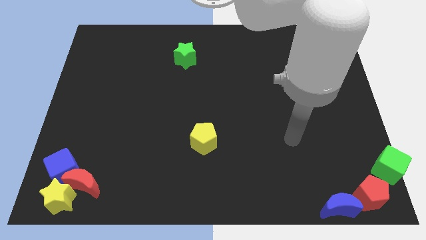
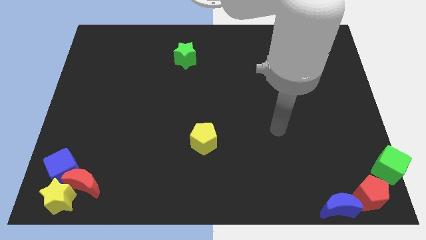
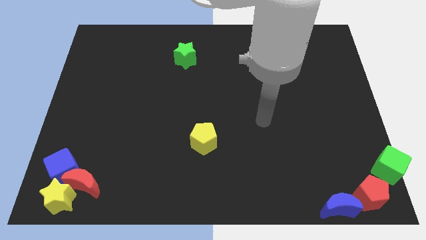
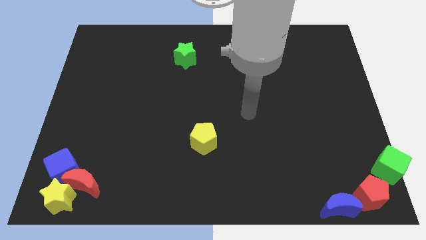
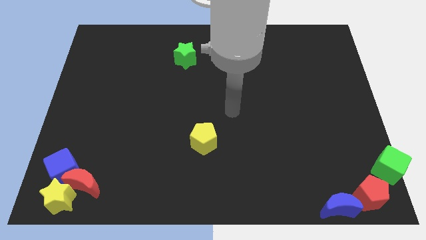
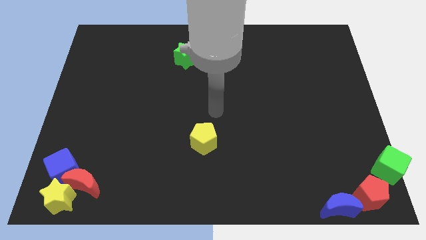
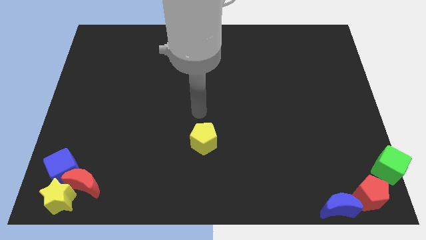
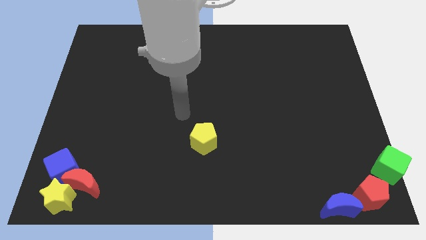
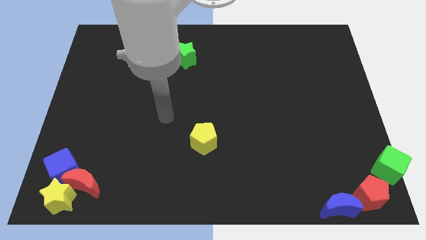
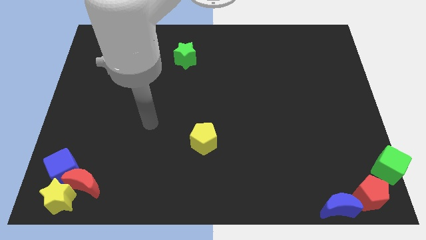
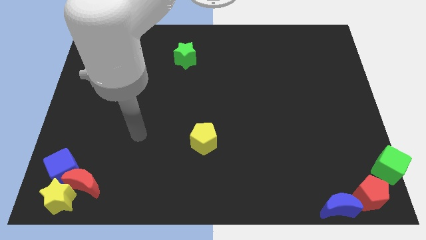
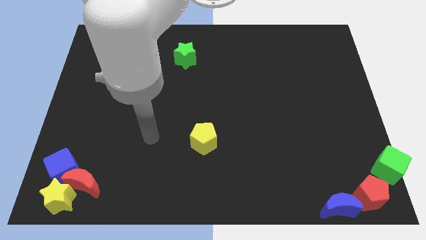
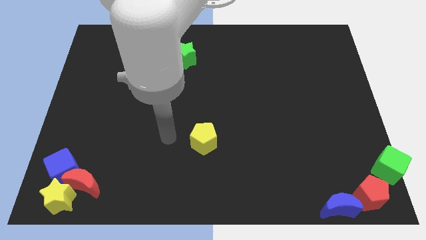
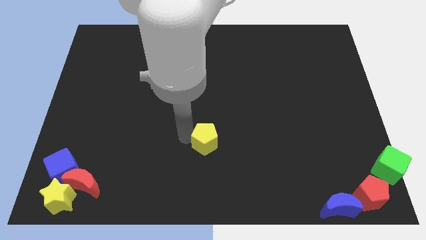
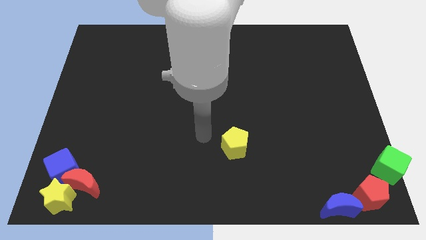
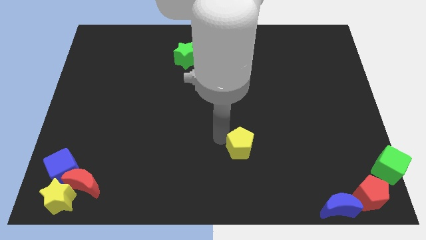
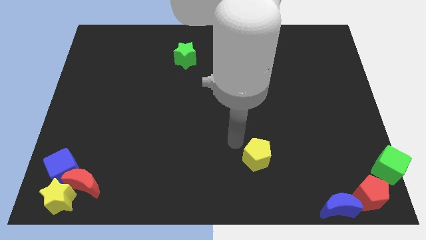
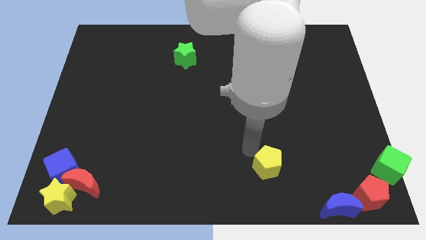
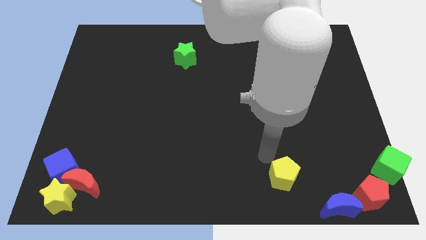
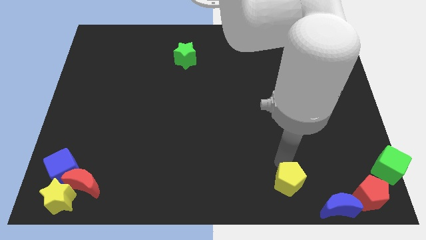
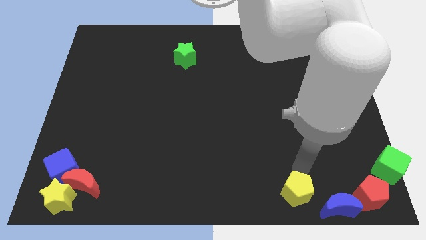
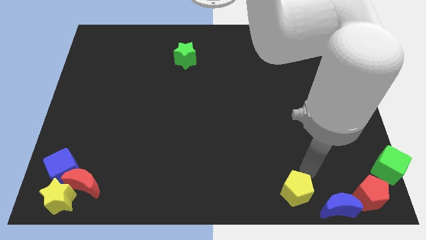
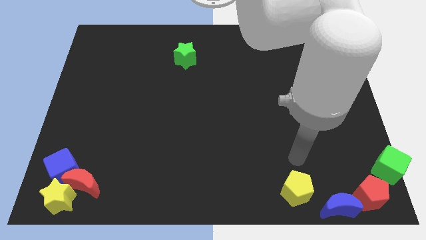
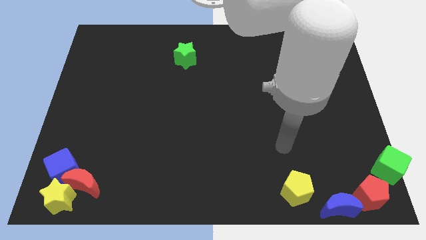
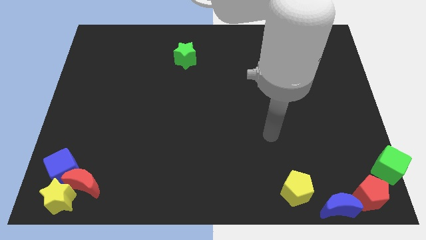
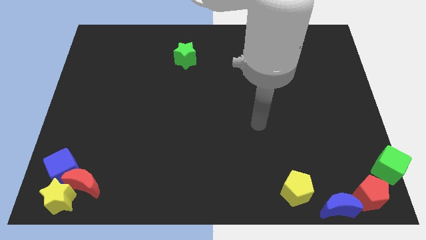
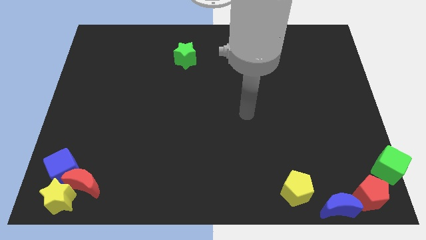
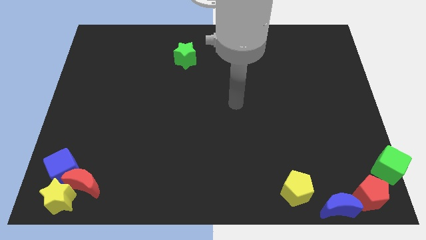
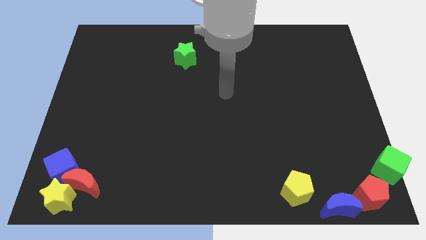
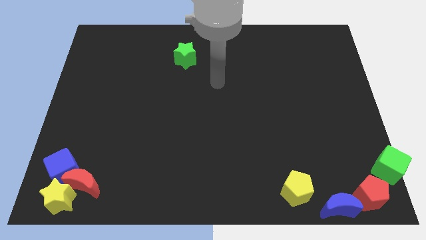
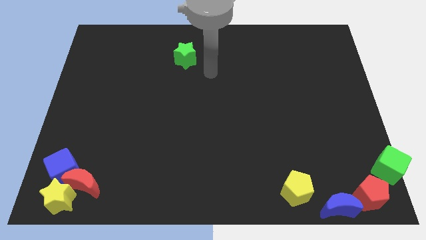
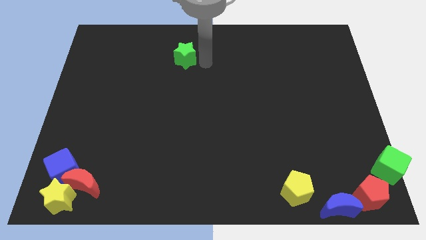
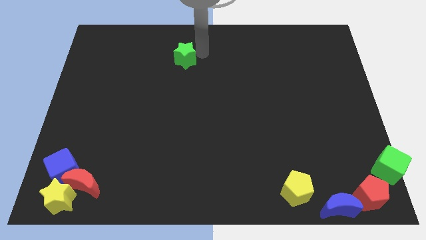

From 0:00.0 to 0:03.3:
point your arm at the right side of the green star

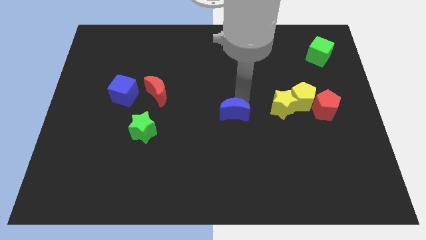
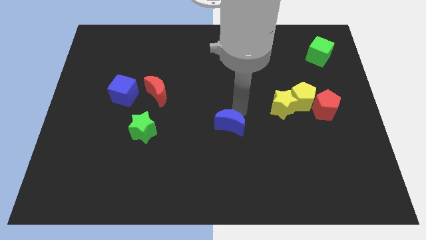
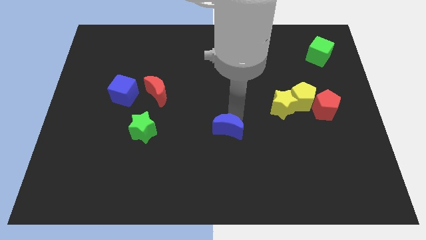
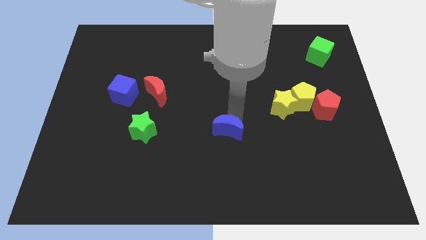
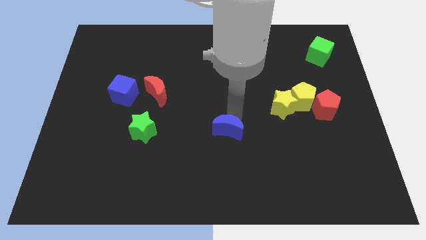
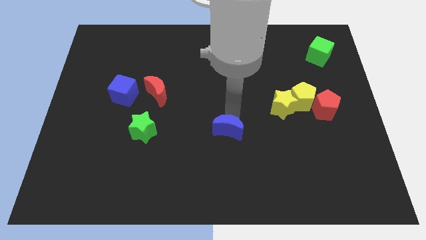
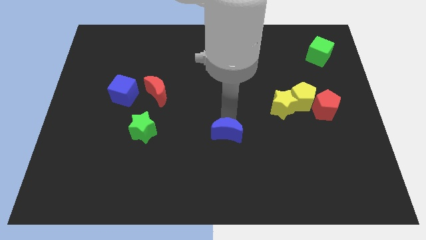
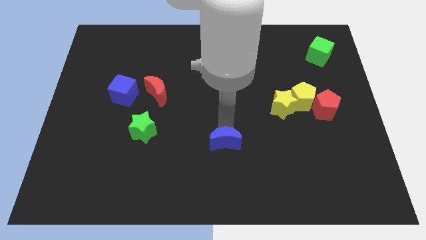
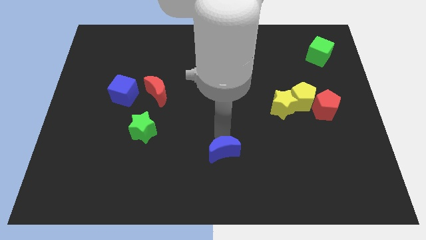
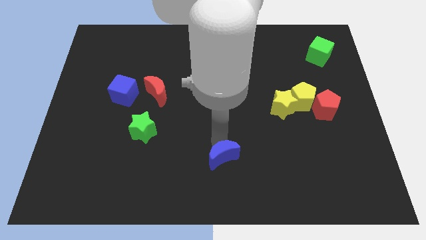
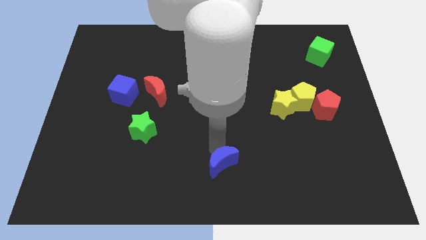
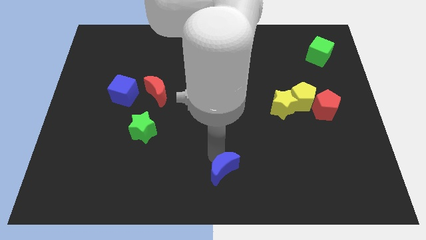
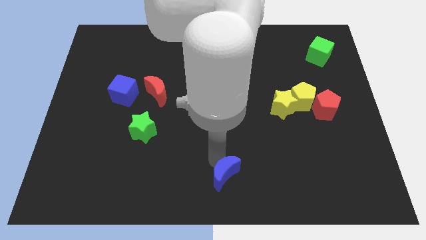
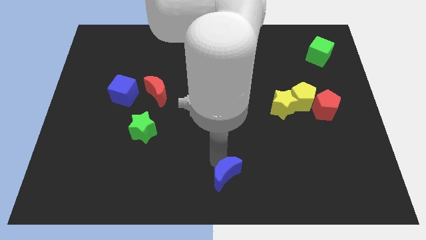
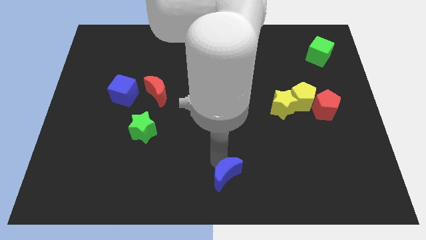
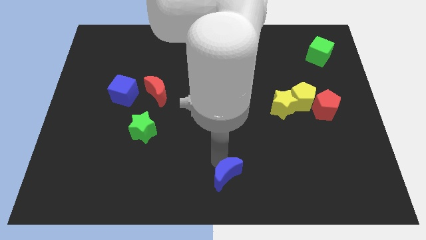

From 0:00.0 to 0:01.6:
move the blue crescent diagonally bottom left to the yellow star

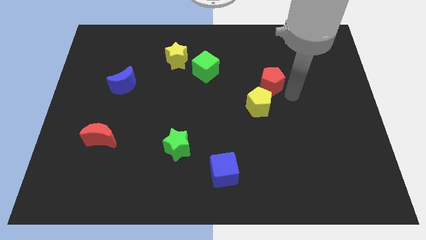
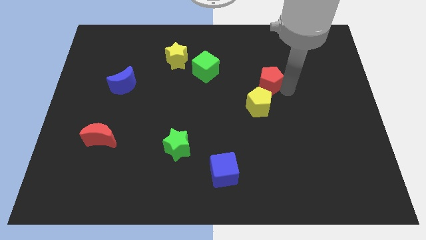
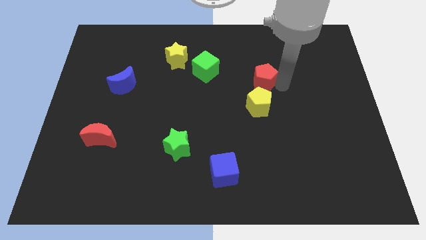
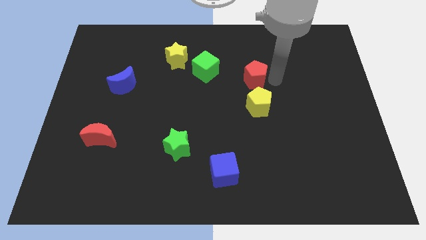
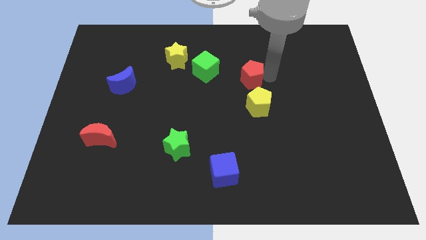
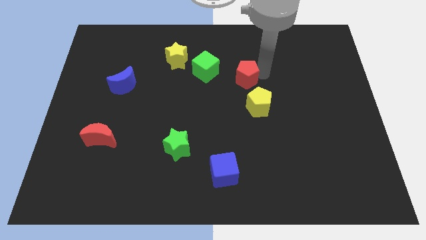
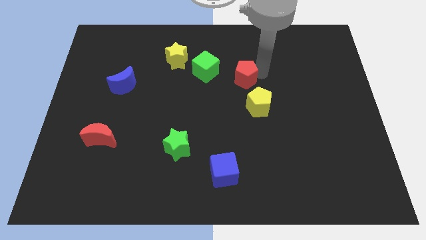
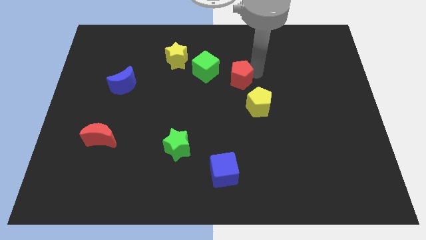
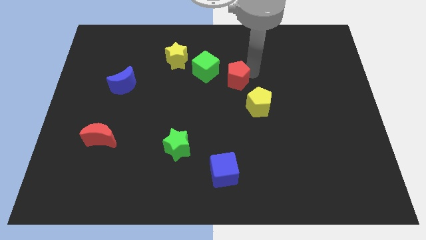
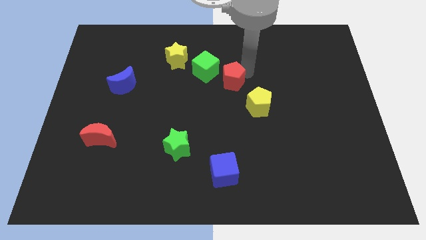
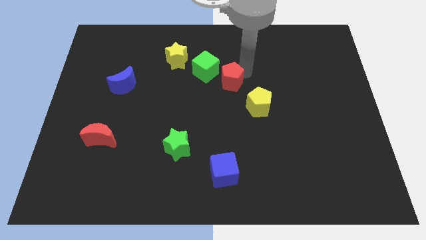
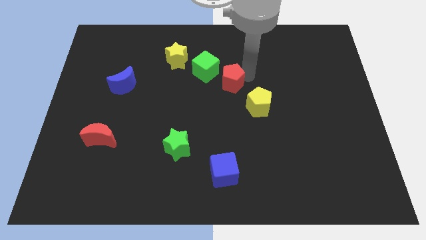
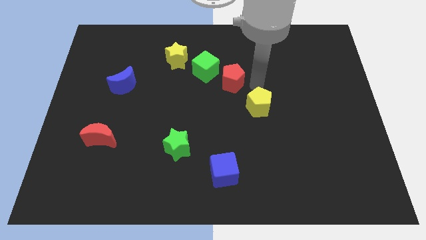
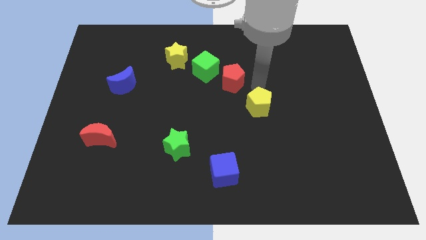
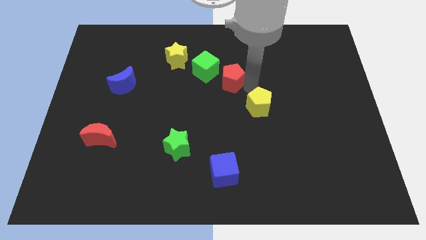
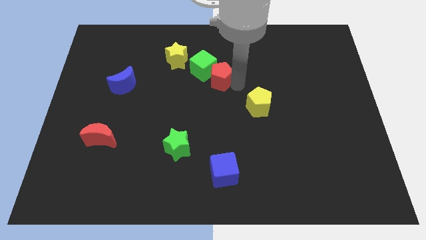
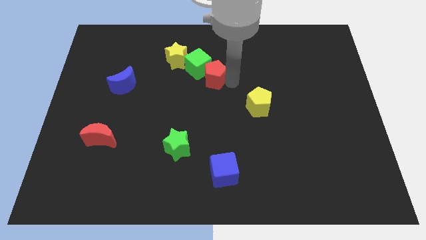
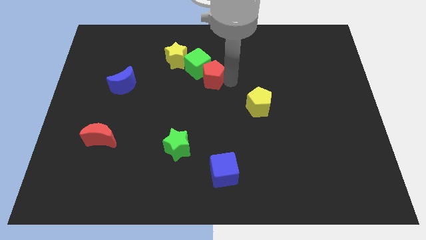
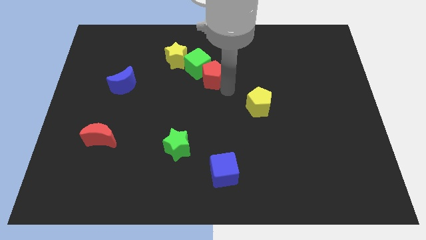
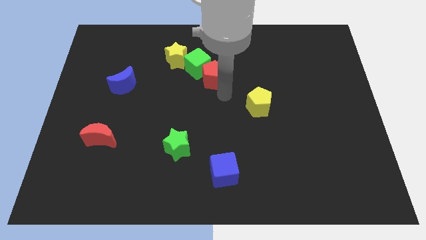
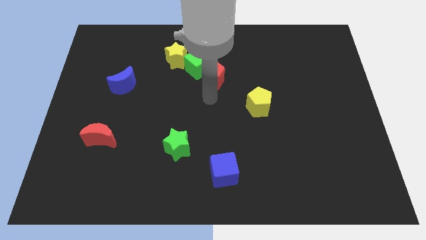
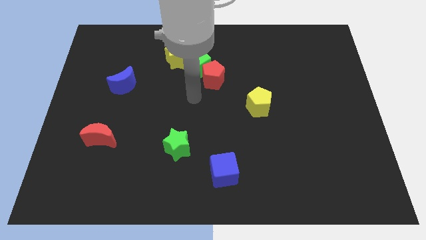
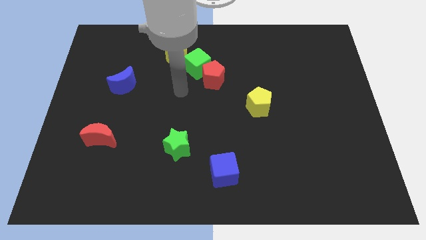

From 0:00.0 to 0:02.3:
push the red pentagon into the green cube

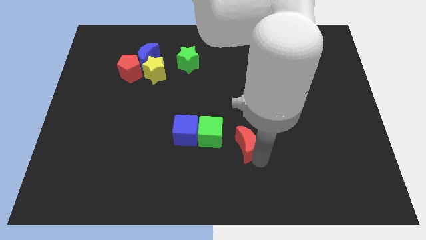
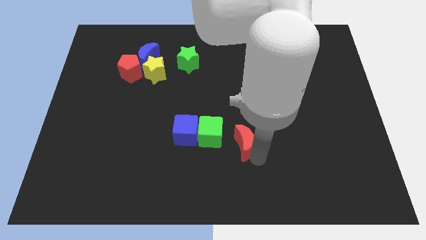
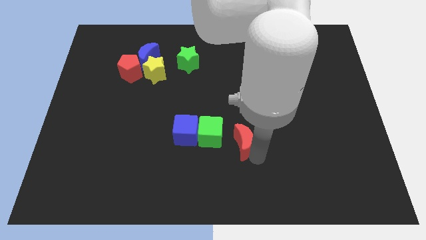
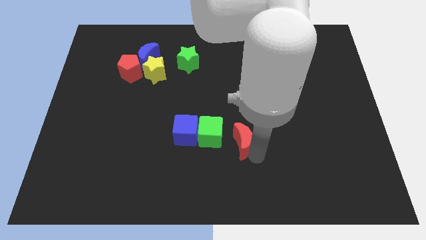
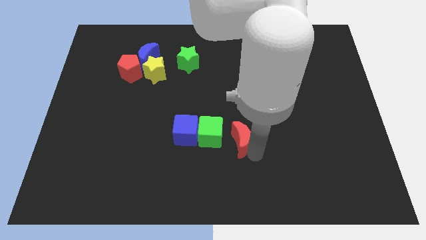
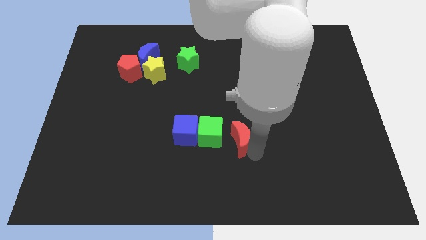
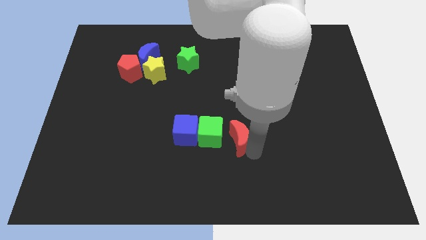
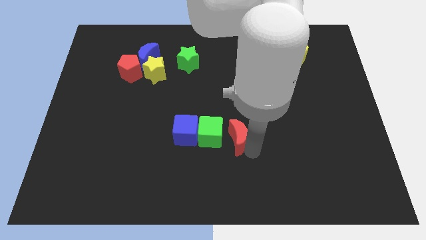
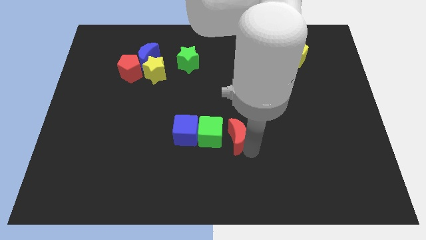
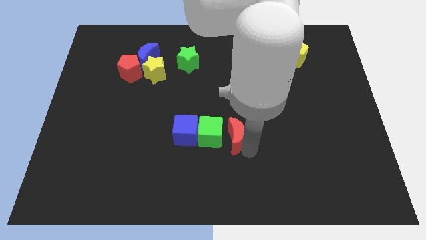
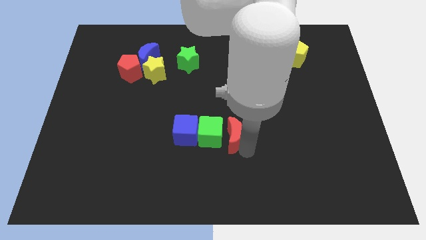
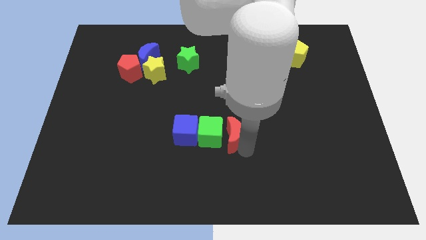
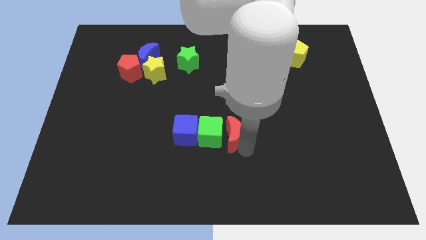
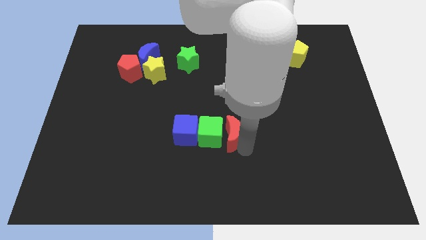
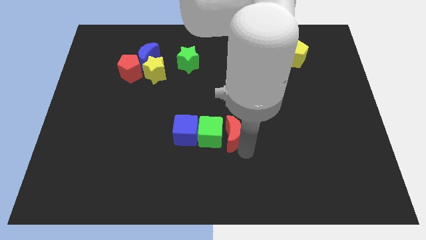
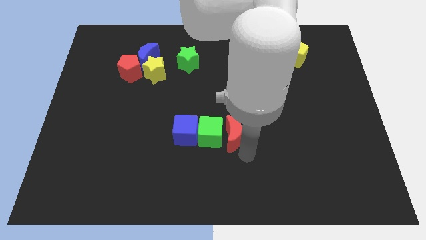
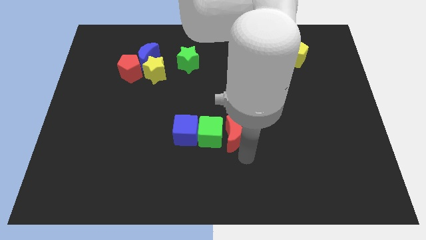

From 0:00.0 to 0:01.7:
put the red moon right to the green cube
